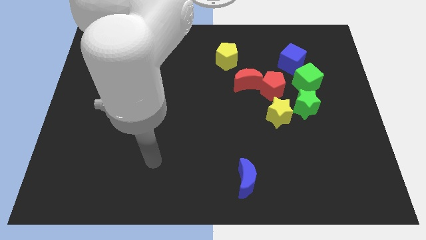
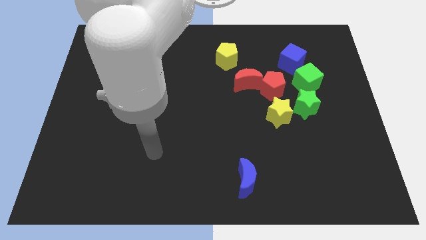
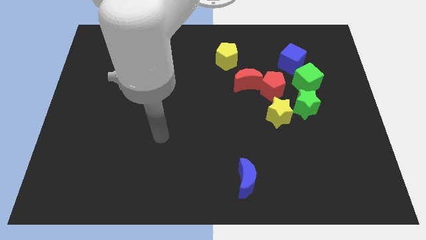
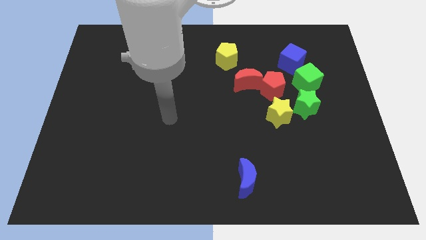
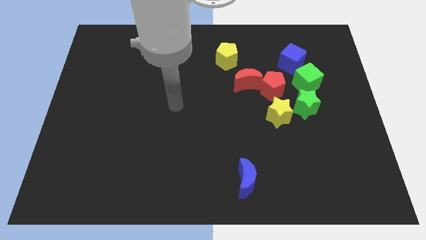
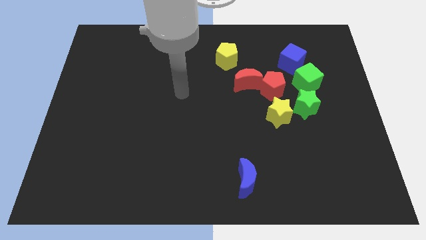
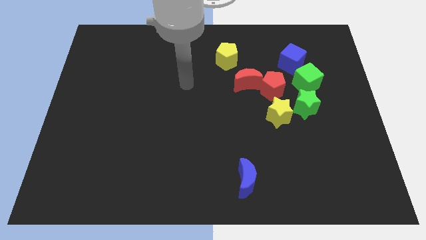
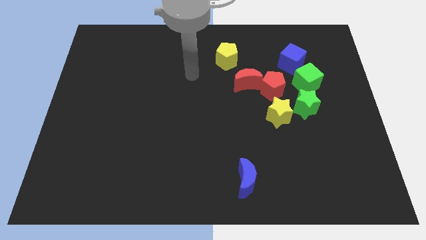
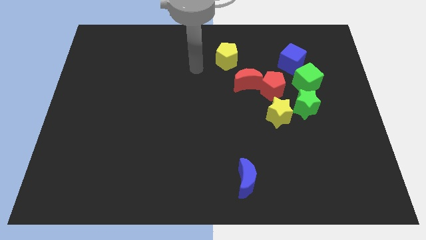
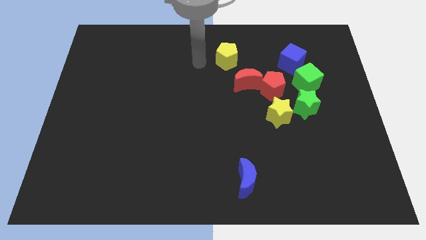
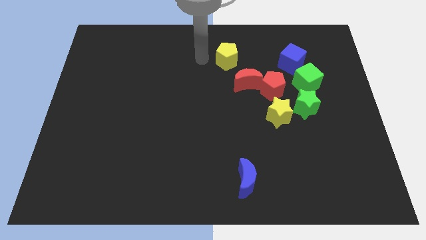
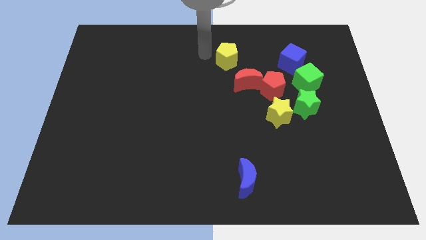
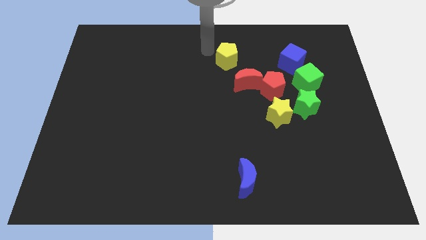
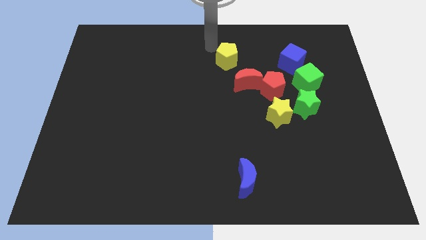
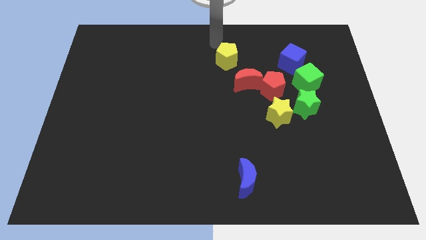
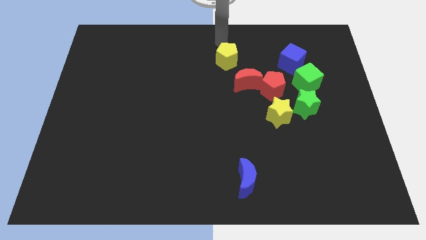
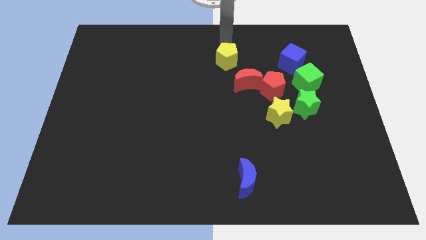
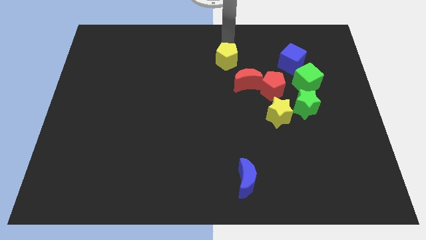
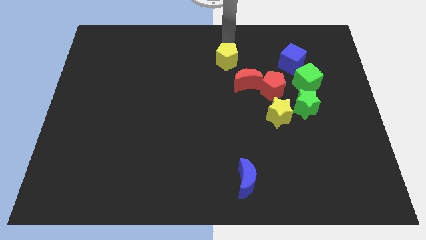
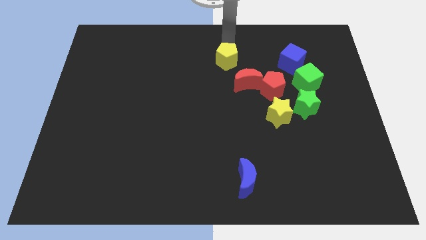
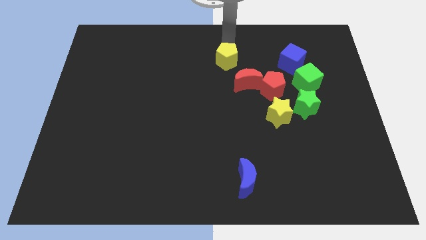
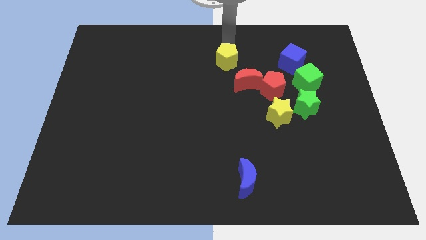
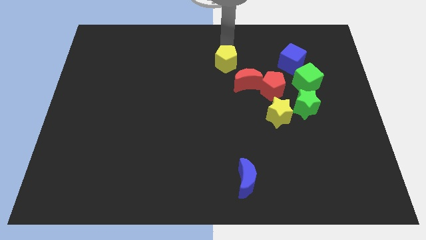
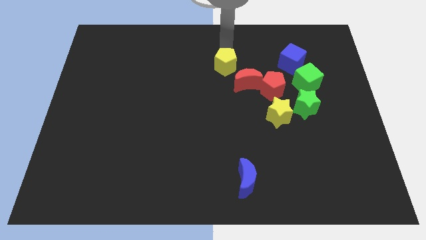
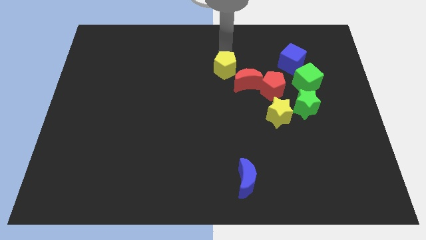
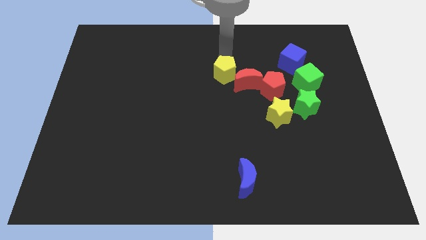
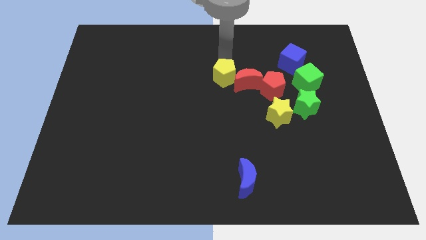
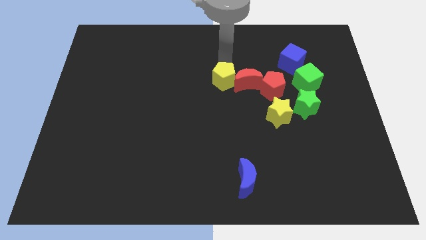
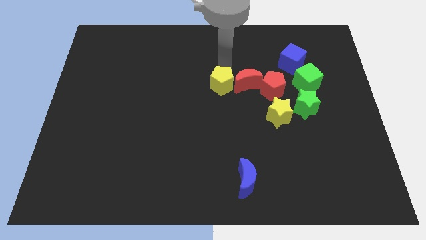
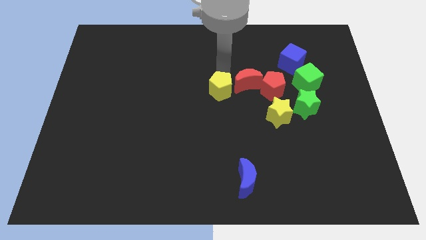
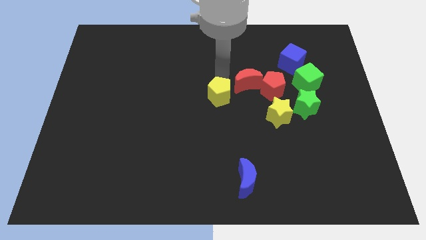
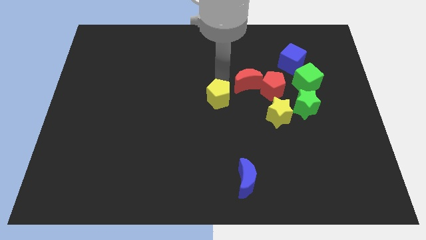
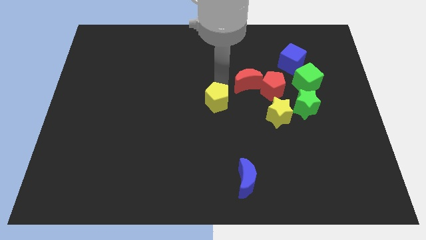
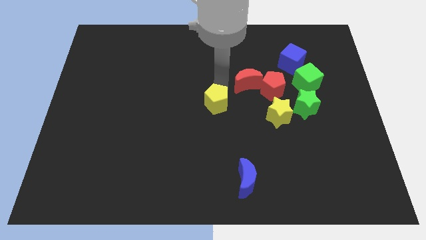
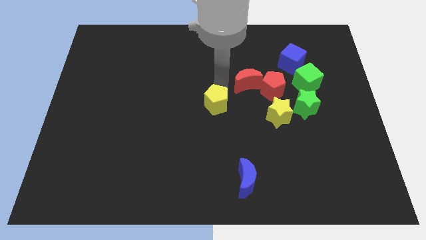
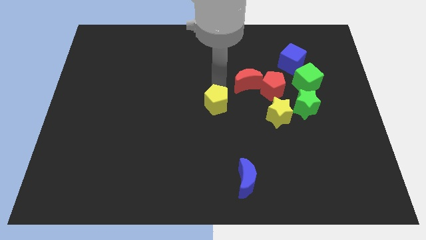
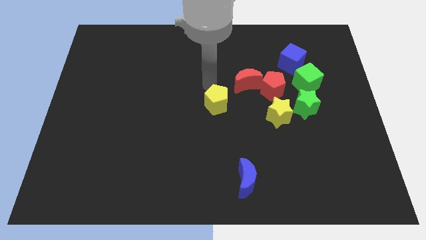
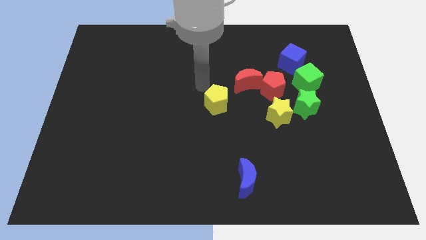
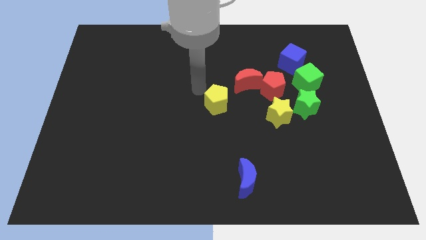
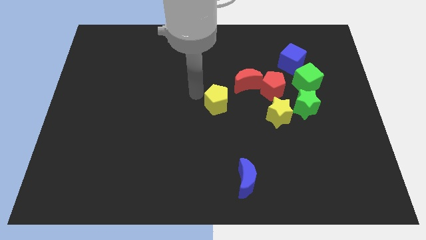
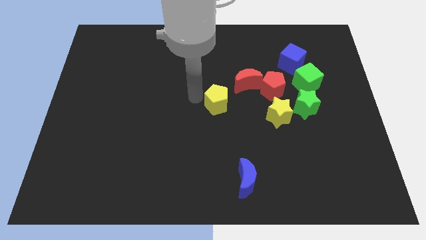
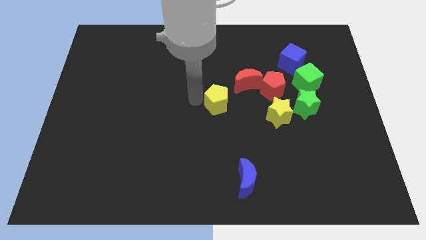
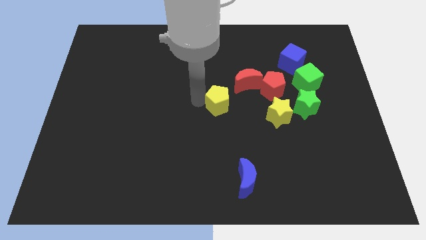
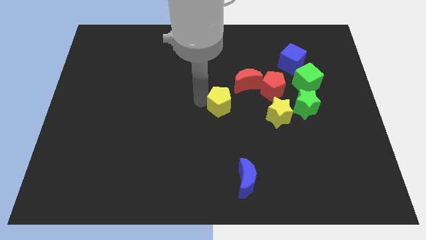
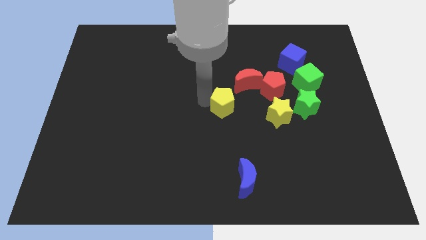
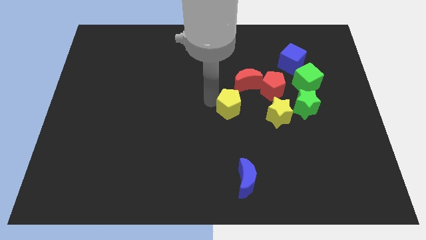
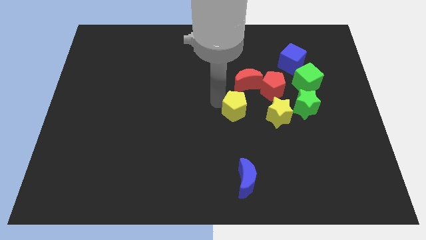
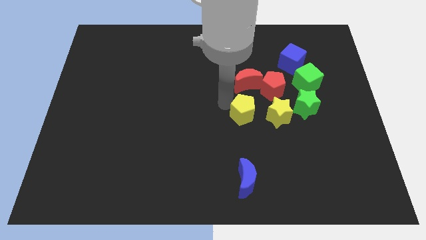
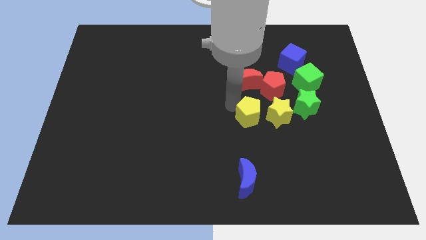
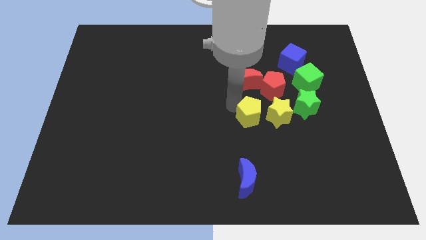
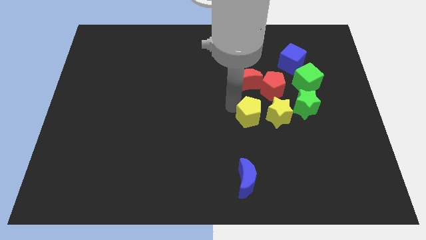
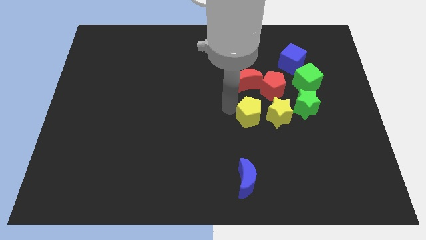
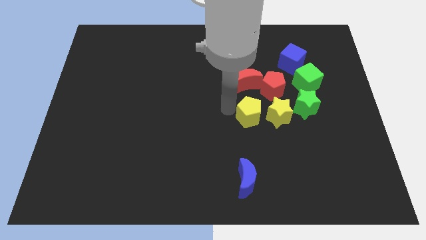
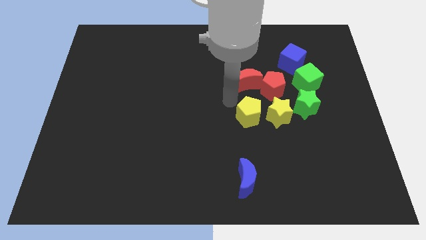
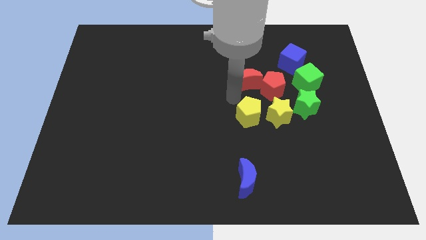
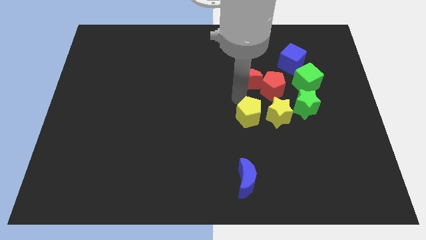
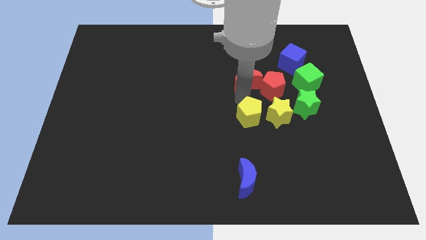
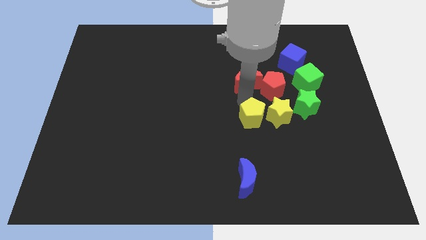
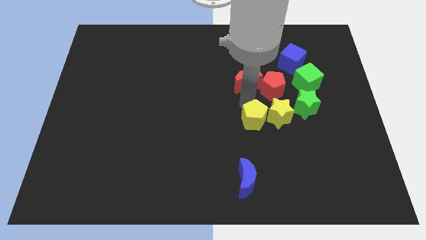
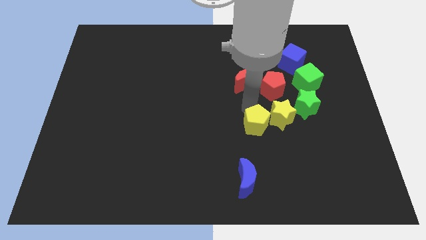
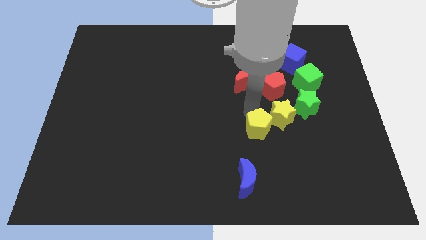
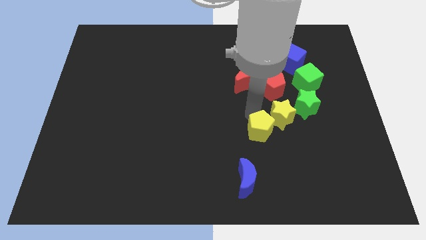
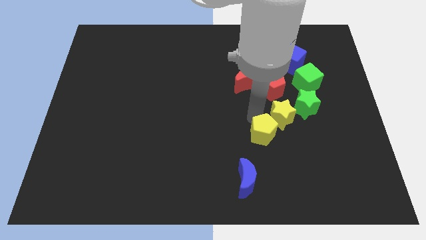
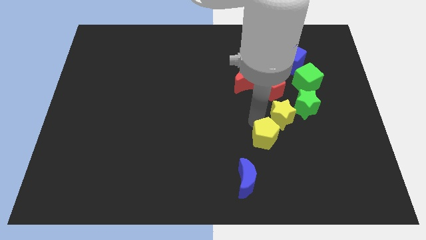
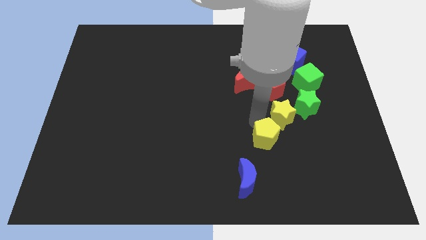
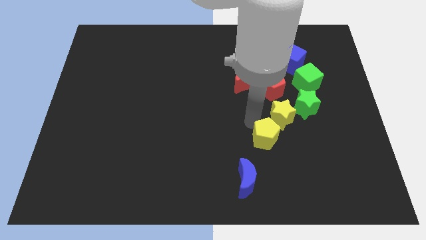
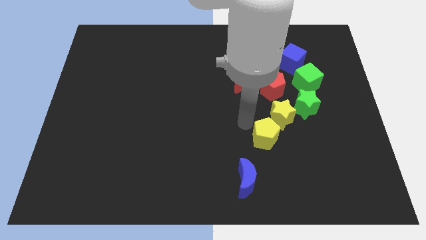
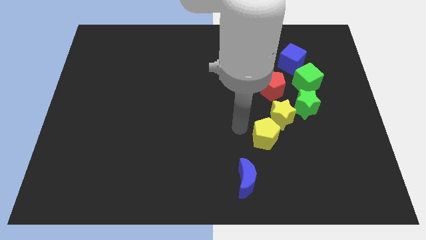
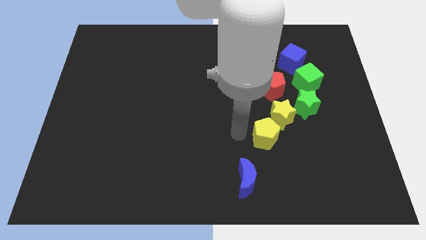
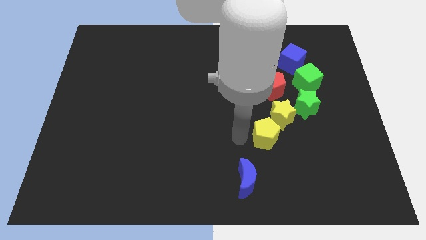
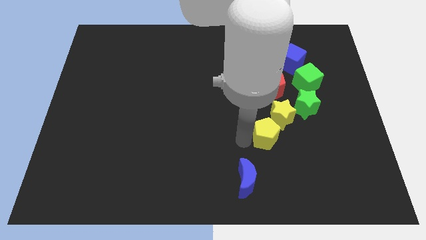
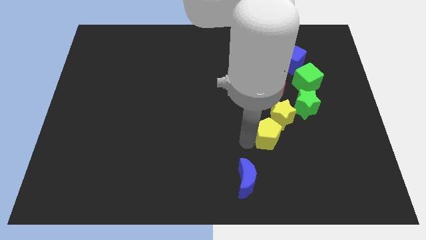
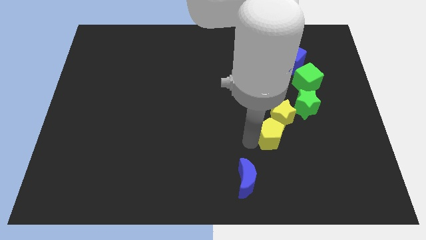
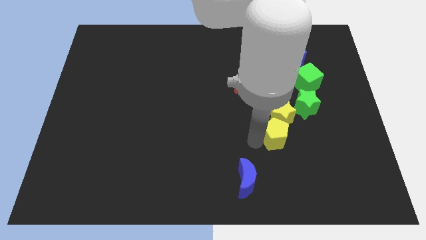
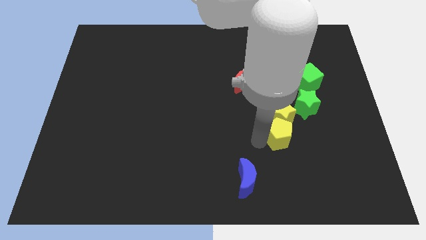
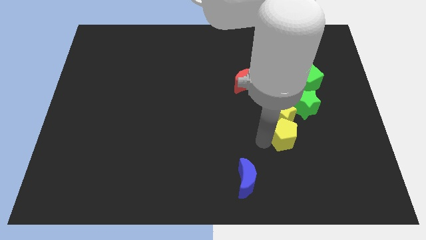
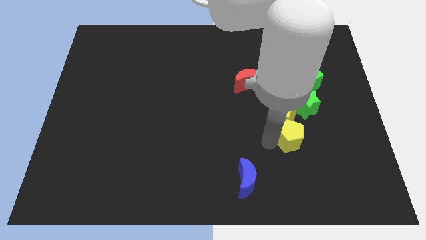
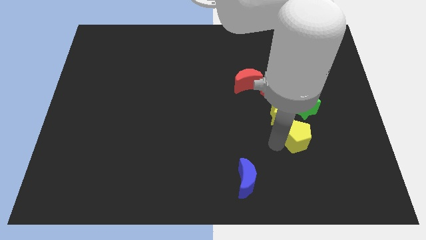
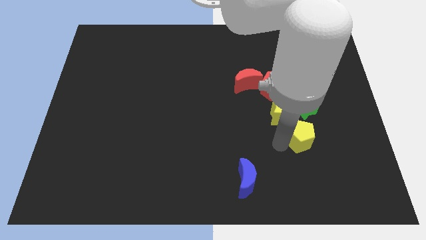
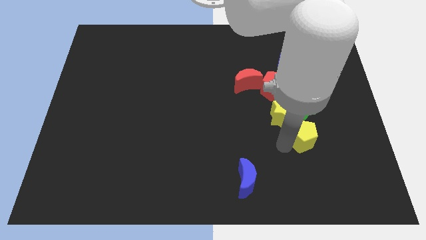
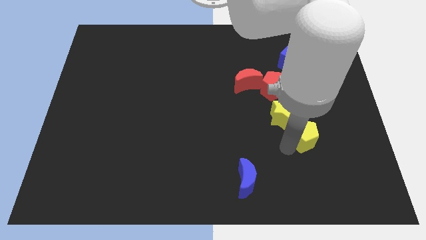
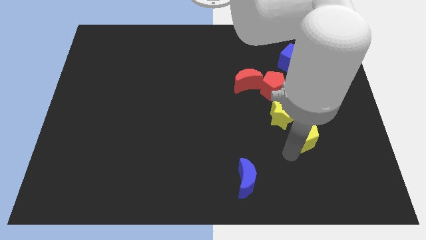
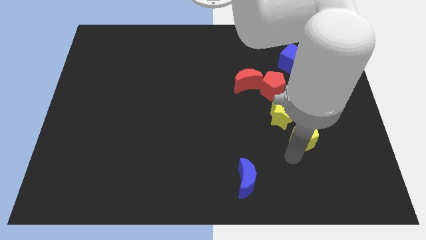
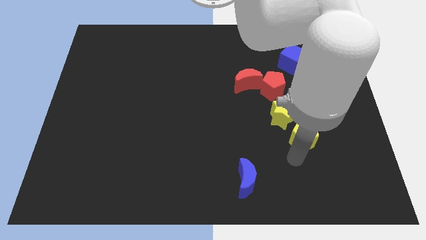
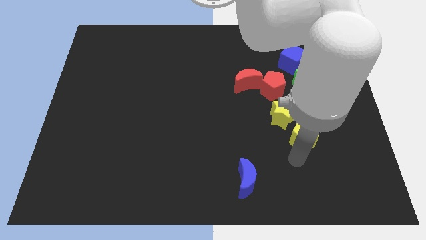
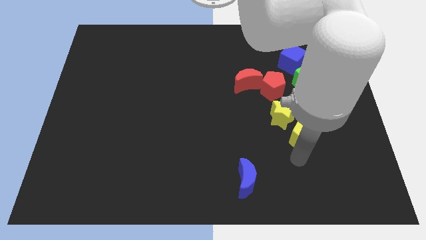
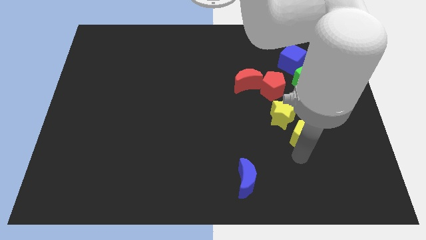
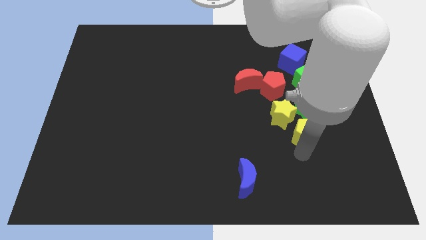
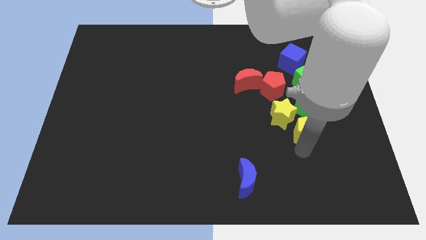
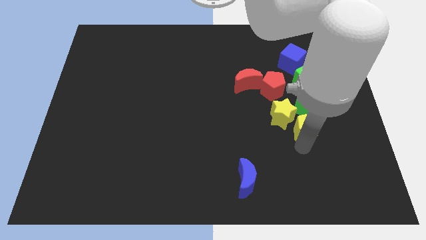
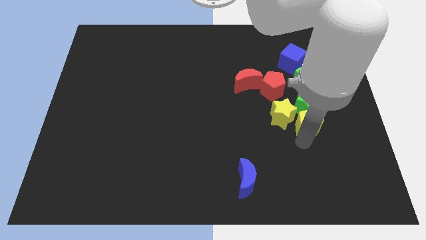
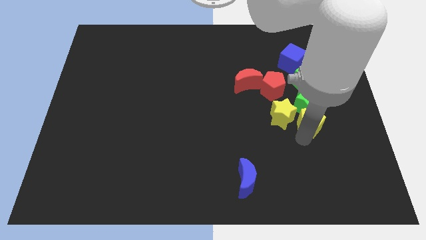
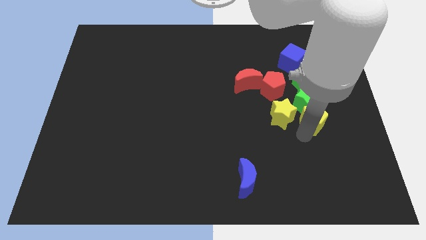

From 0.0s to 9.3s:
move the yellow pentagon next to the green star
